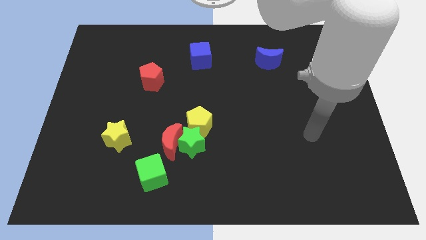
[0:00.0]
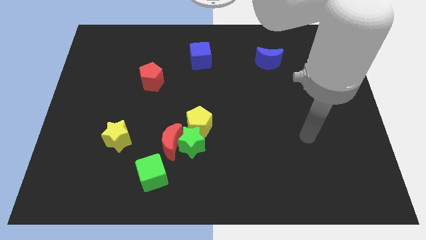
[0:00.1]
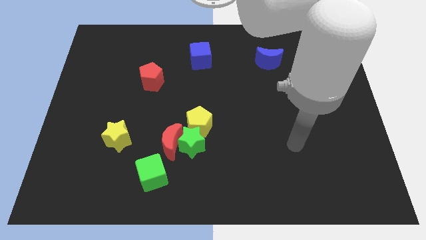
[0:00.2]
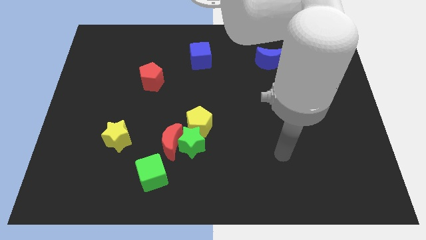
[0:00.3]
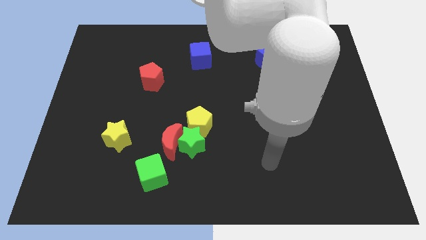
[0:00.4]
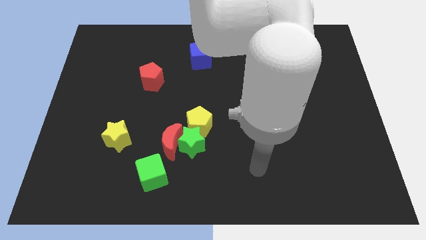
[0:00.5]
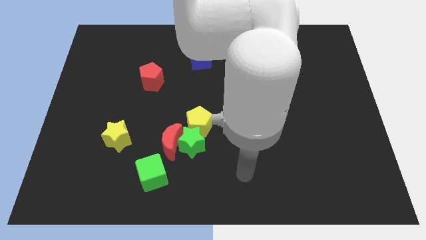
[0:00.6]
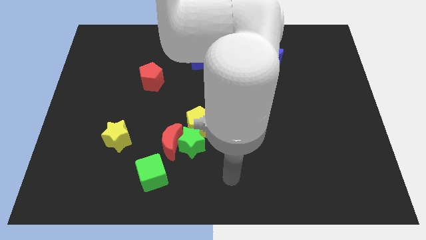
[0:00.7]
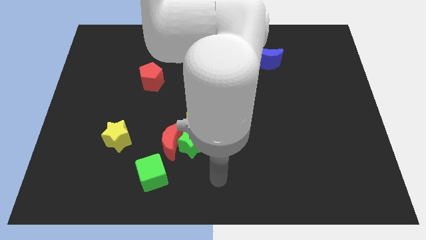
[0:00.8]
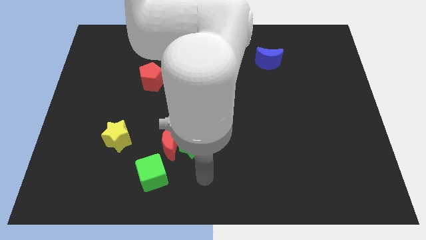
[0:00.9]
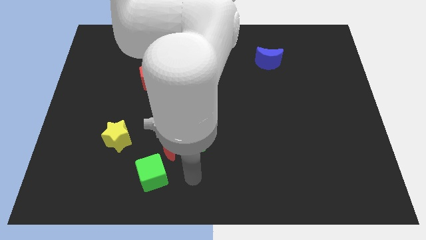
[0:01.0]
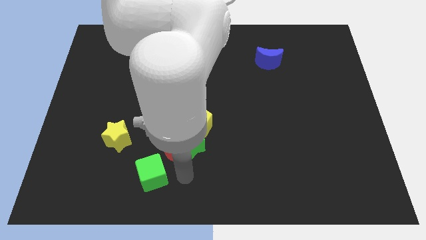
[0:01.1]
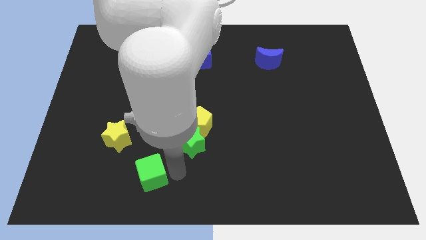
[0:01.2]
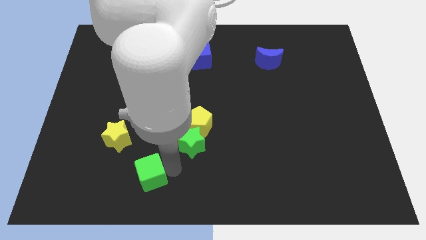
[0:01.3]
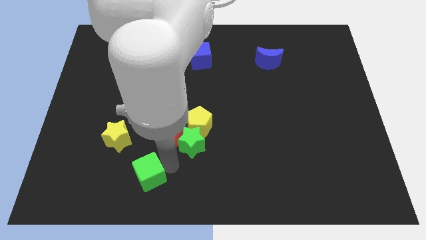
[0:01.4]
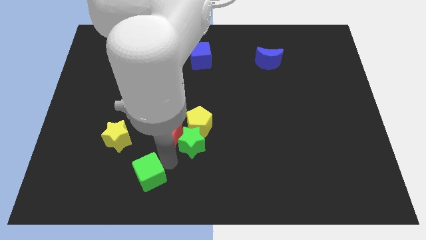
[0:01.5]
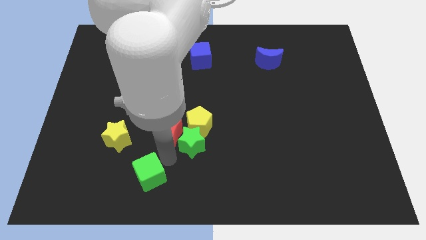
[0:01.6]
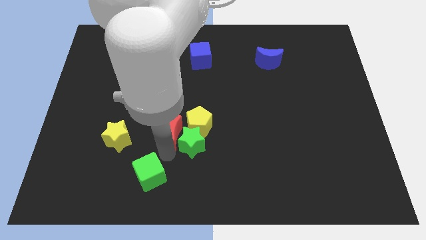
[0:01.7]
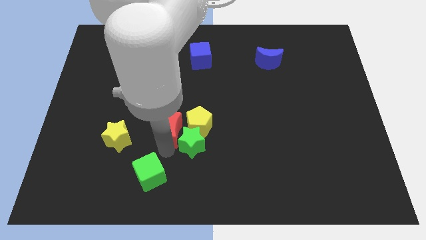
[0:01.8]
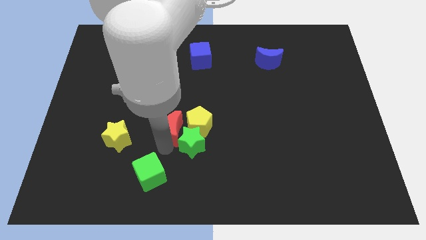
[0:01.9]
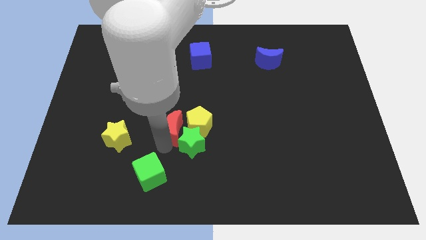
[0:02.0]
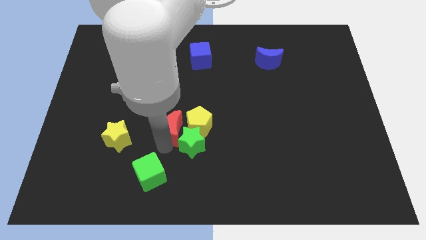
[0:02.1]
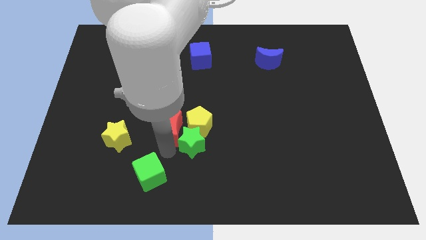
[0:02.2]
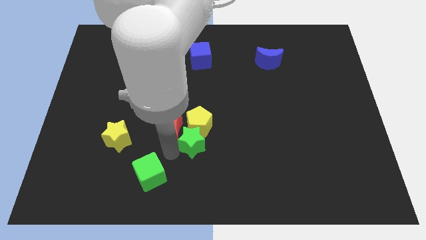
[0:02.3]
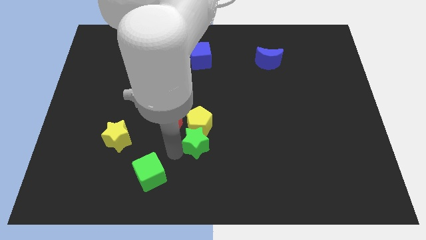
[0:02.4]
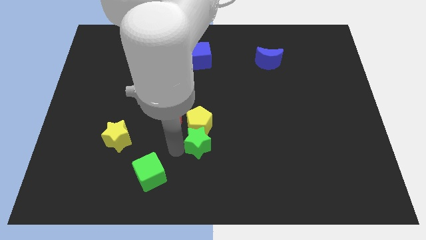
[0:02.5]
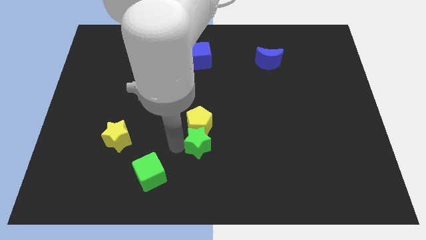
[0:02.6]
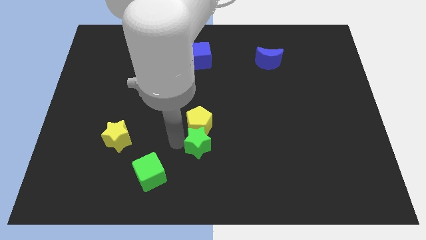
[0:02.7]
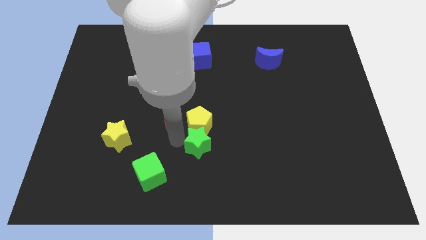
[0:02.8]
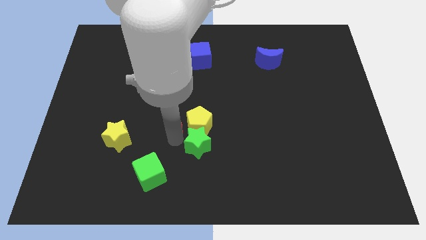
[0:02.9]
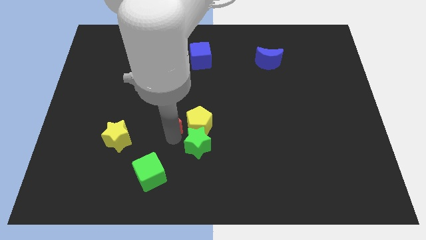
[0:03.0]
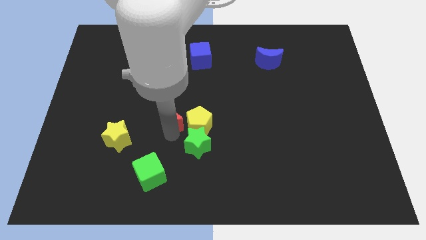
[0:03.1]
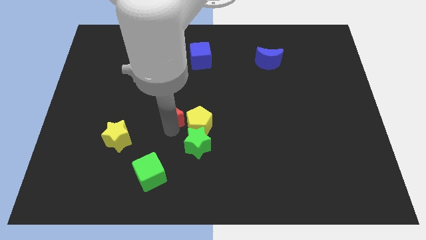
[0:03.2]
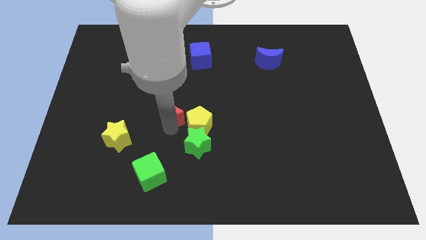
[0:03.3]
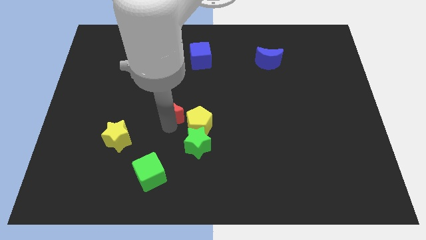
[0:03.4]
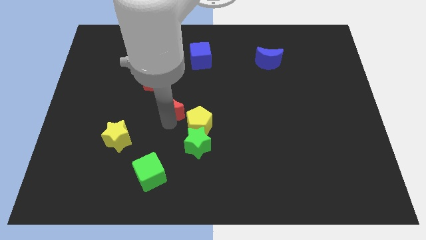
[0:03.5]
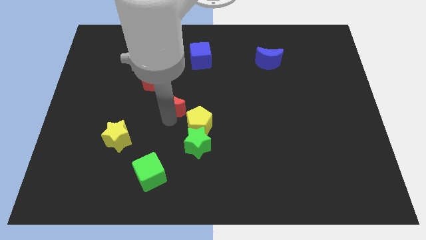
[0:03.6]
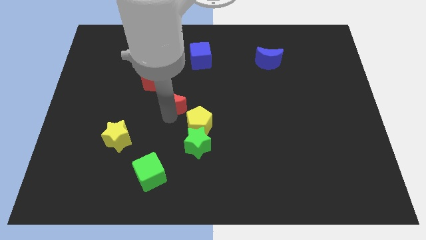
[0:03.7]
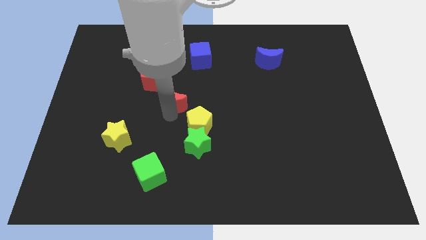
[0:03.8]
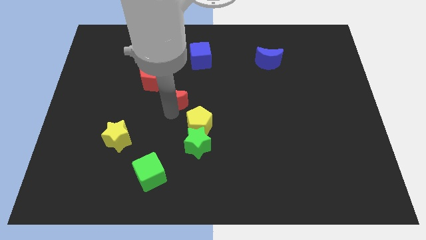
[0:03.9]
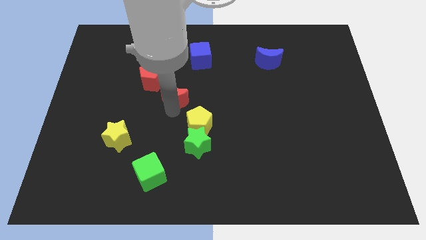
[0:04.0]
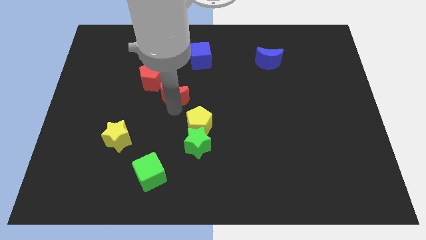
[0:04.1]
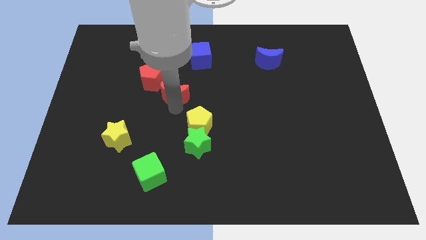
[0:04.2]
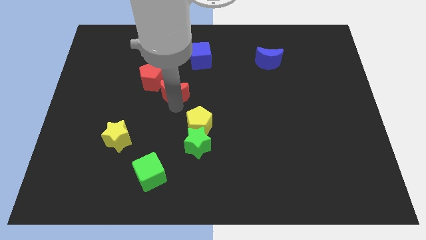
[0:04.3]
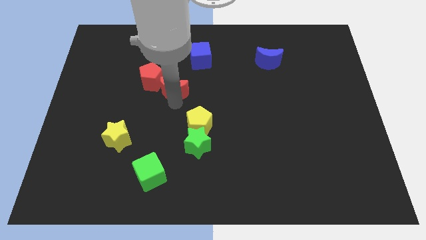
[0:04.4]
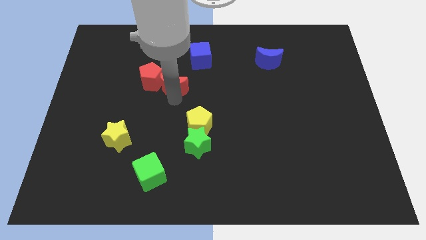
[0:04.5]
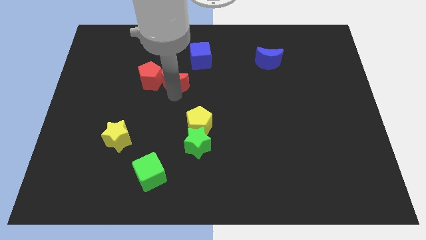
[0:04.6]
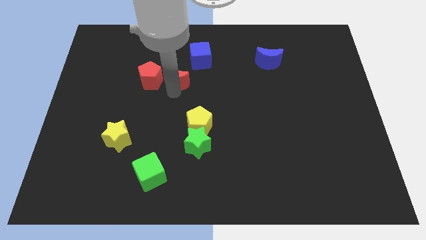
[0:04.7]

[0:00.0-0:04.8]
put the red moon next to the red pentagon

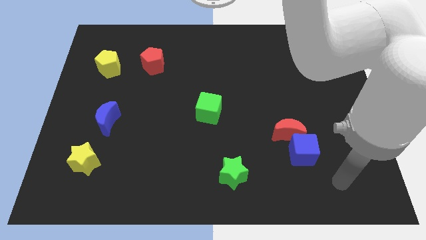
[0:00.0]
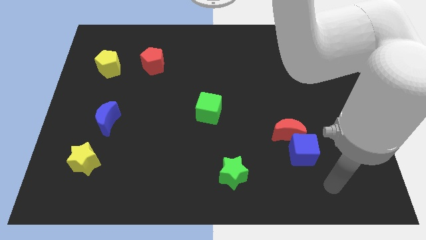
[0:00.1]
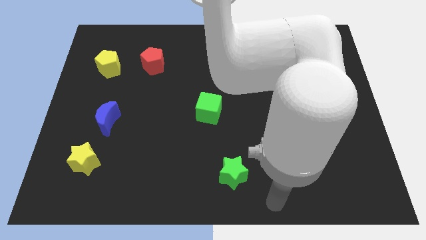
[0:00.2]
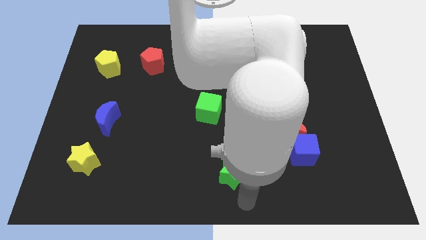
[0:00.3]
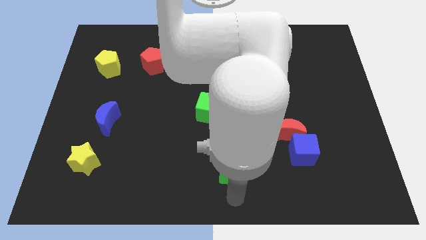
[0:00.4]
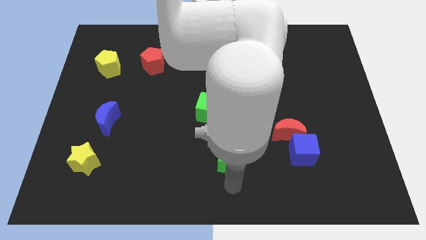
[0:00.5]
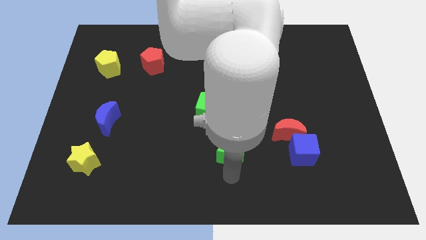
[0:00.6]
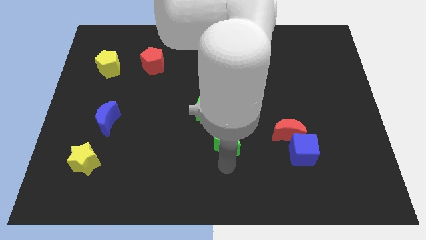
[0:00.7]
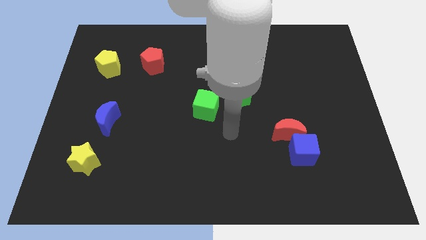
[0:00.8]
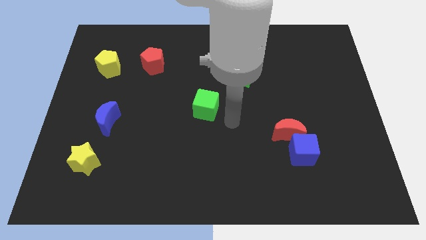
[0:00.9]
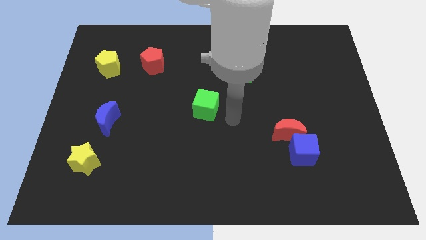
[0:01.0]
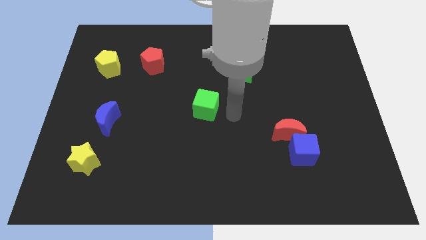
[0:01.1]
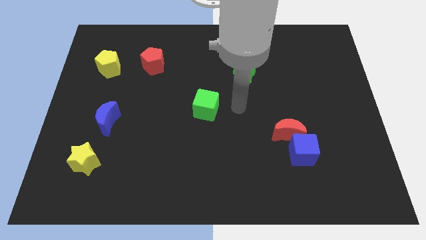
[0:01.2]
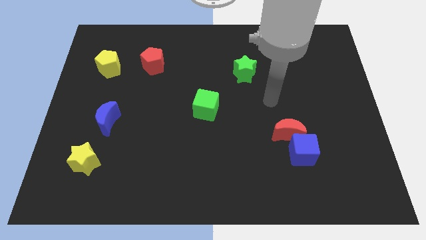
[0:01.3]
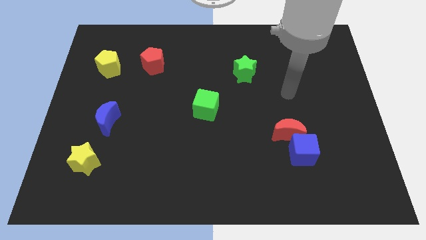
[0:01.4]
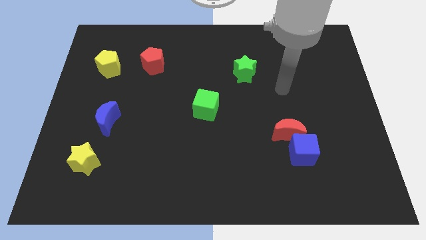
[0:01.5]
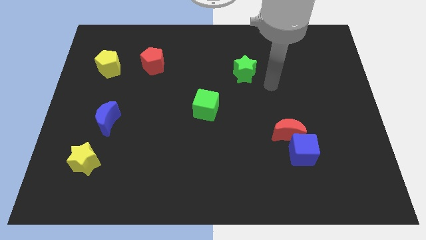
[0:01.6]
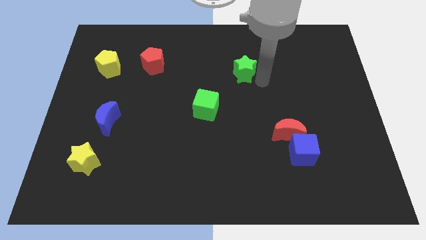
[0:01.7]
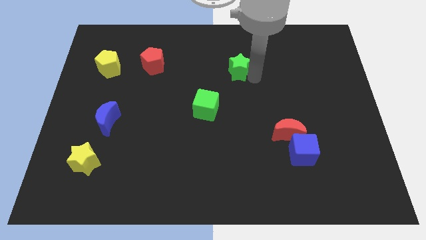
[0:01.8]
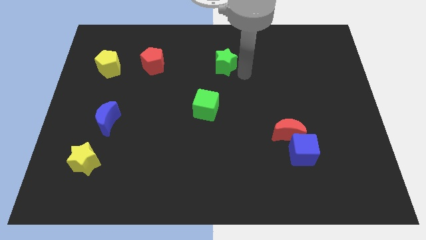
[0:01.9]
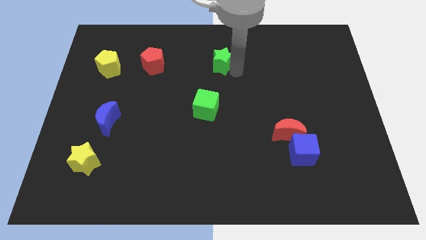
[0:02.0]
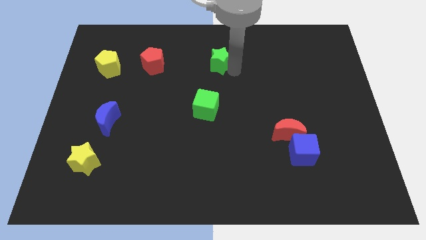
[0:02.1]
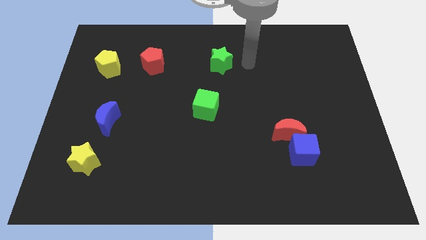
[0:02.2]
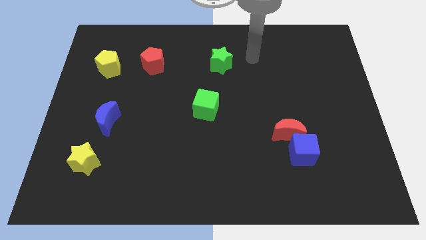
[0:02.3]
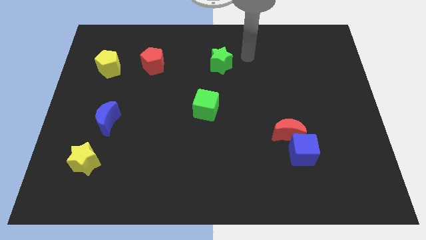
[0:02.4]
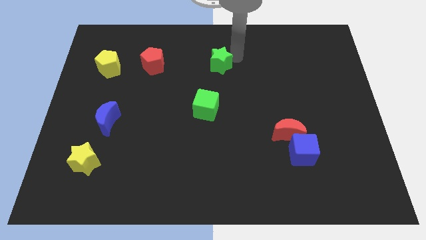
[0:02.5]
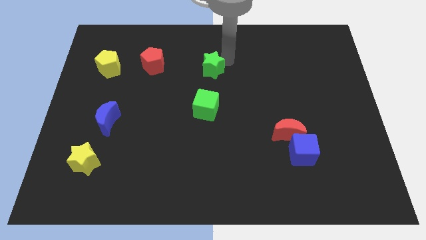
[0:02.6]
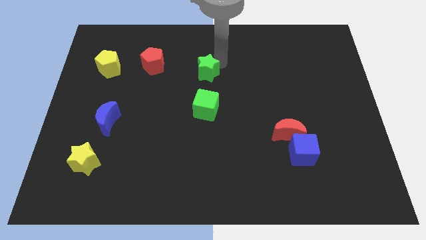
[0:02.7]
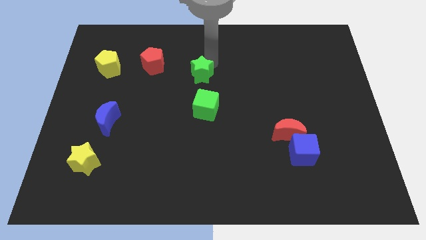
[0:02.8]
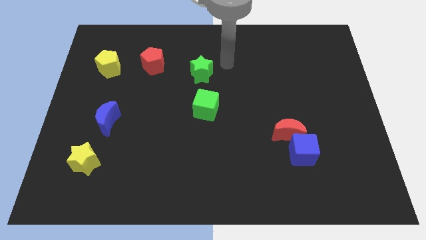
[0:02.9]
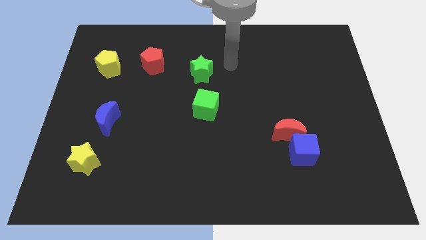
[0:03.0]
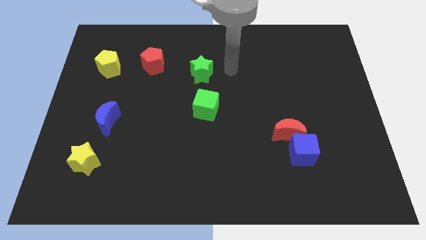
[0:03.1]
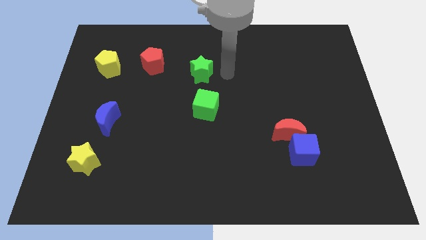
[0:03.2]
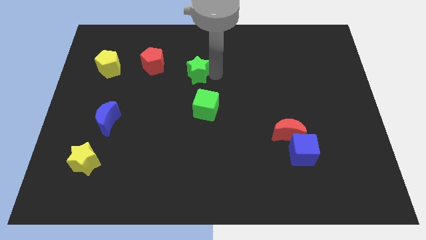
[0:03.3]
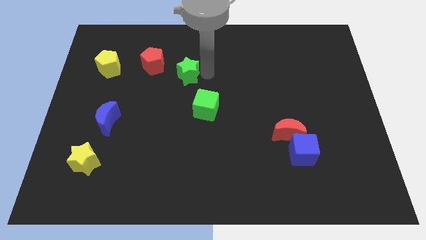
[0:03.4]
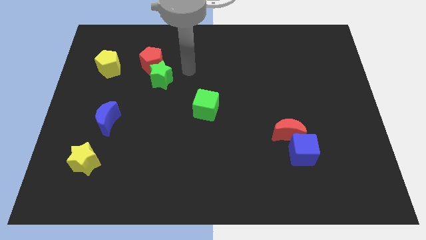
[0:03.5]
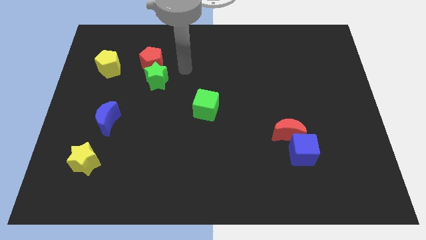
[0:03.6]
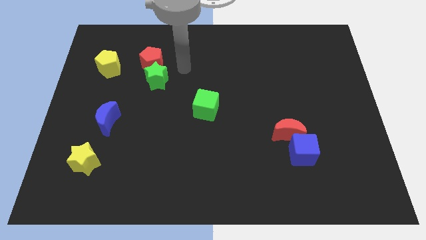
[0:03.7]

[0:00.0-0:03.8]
slide the green star next to the red pentagon
